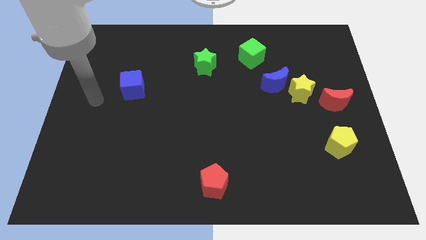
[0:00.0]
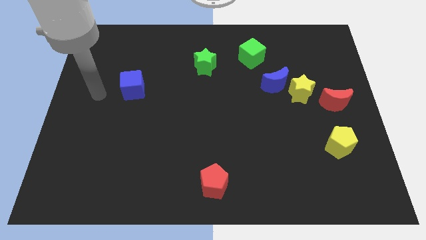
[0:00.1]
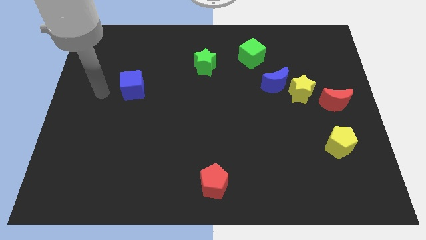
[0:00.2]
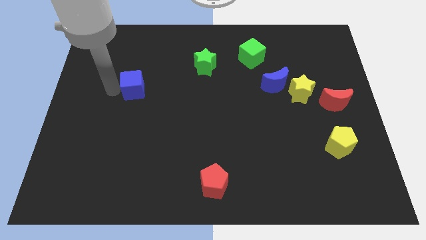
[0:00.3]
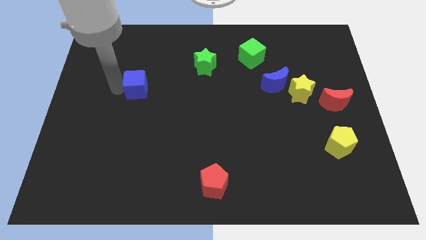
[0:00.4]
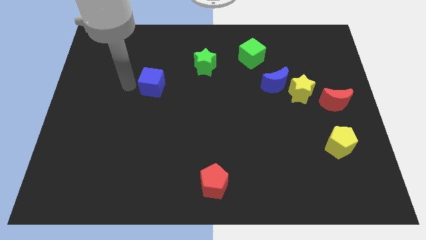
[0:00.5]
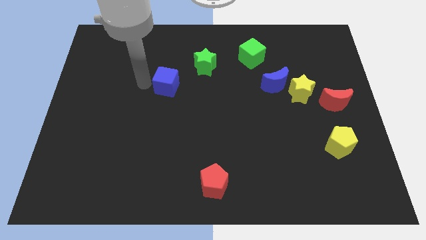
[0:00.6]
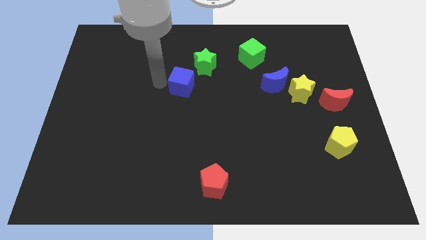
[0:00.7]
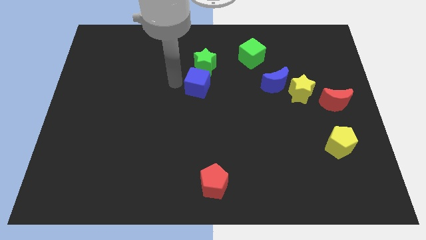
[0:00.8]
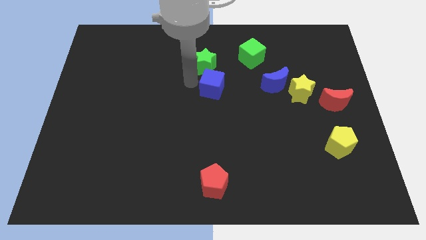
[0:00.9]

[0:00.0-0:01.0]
move the blue cube towards the center

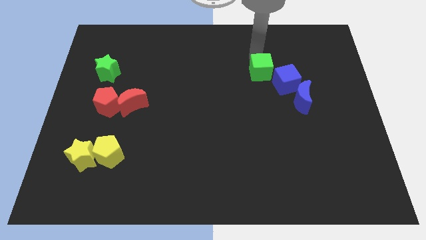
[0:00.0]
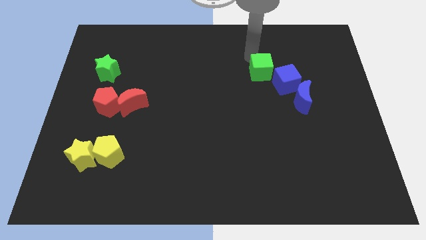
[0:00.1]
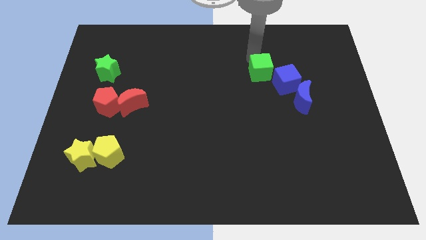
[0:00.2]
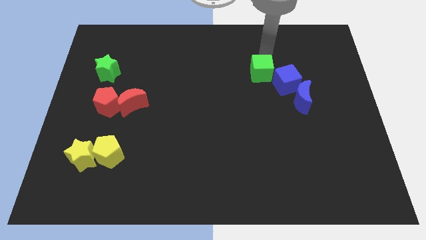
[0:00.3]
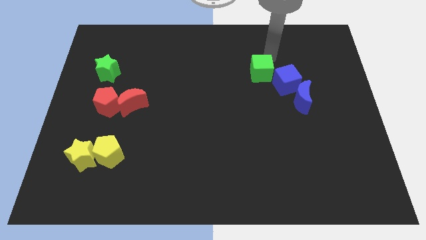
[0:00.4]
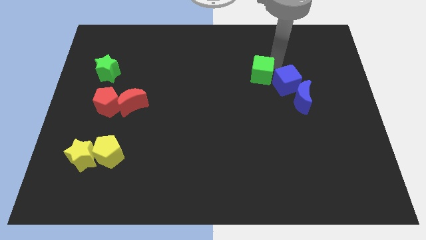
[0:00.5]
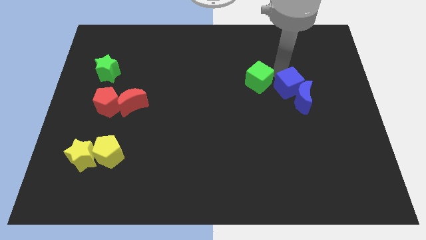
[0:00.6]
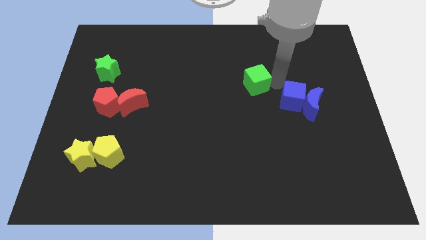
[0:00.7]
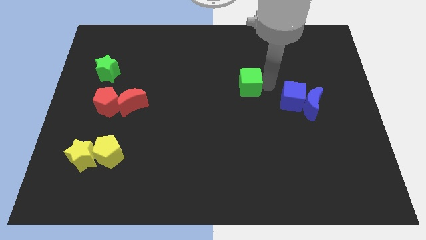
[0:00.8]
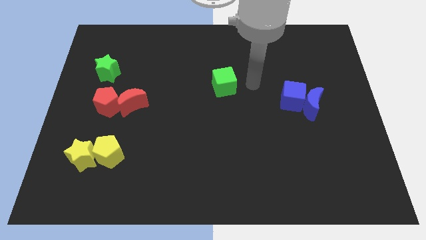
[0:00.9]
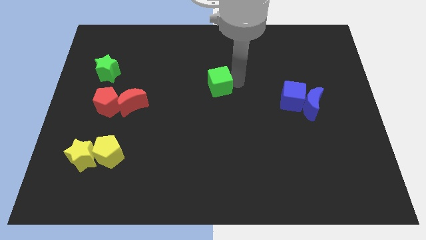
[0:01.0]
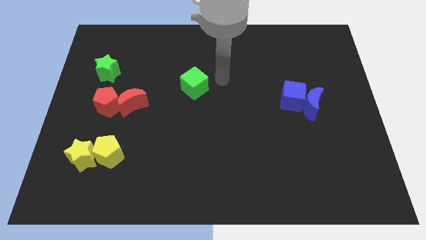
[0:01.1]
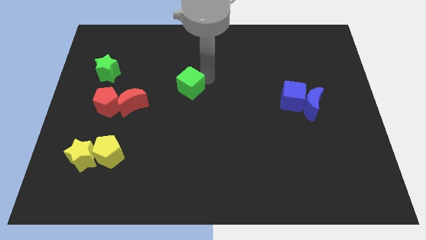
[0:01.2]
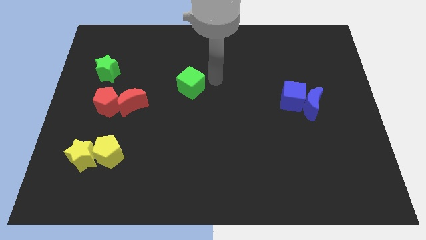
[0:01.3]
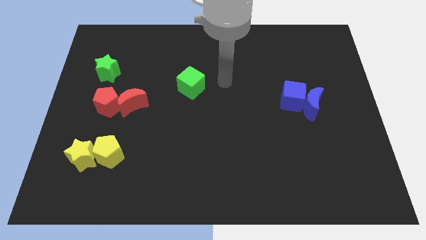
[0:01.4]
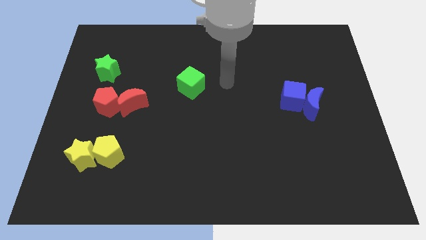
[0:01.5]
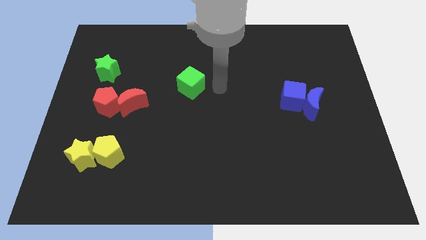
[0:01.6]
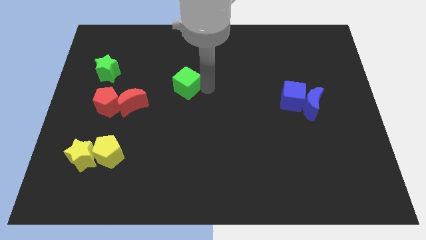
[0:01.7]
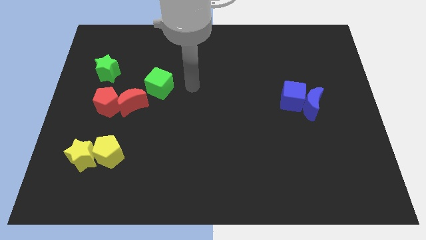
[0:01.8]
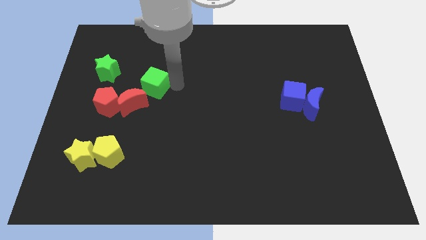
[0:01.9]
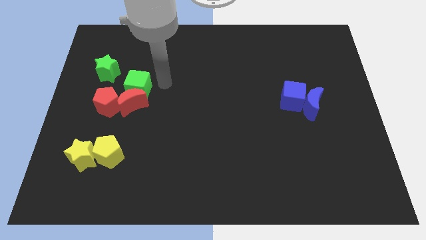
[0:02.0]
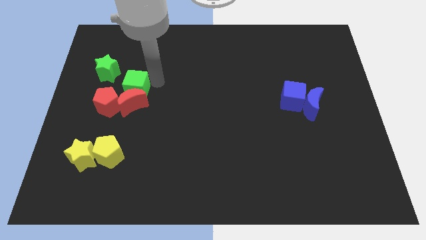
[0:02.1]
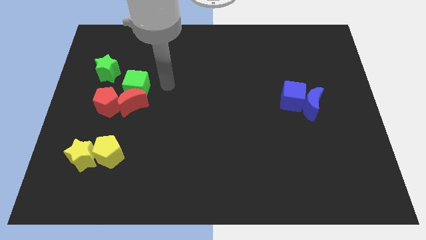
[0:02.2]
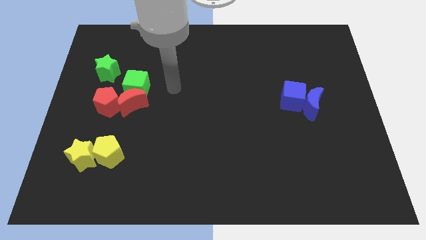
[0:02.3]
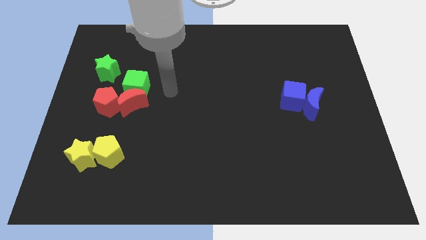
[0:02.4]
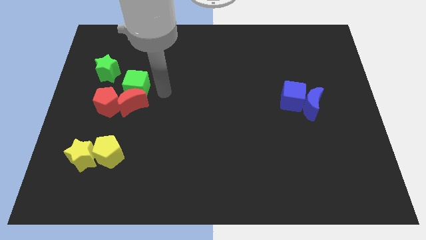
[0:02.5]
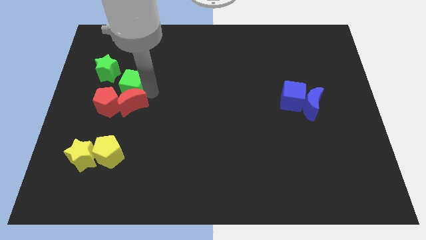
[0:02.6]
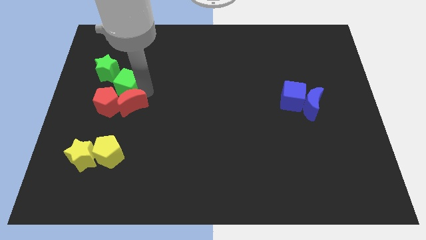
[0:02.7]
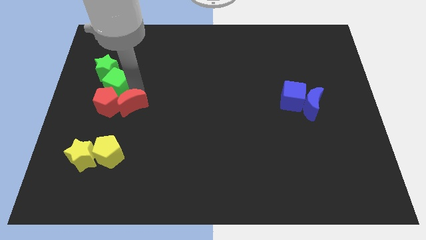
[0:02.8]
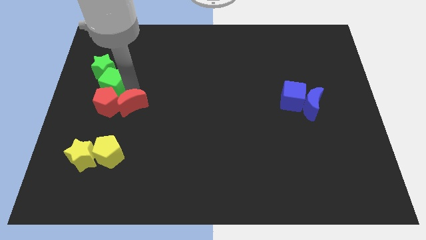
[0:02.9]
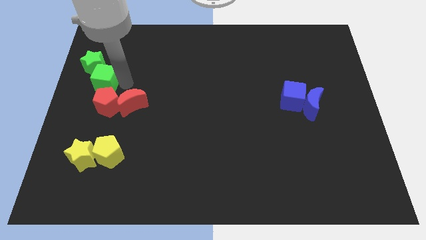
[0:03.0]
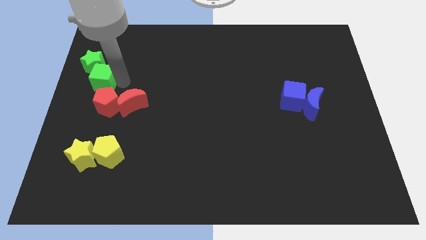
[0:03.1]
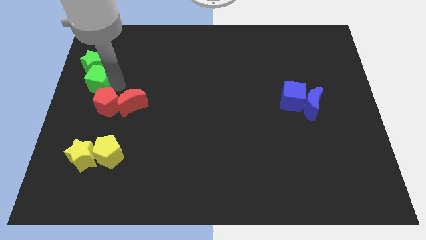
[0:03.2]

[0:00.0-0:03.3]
place the green cube between the green star and red pentagon

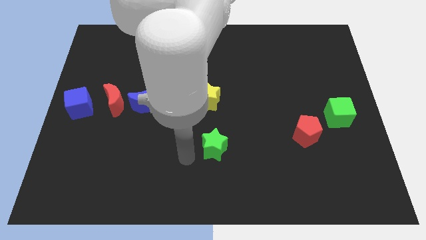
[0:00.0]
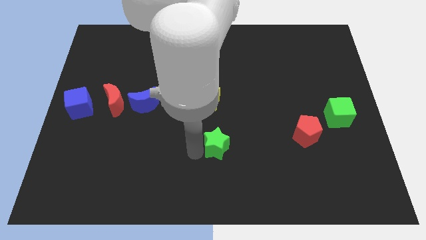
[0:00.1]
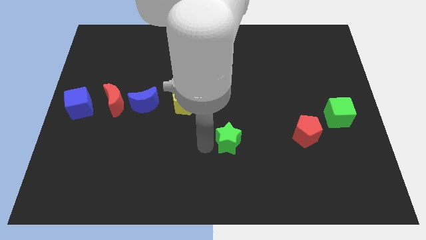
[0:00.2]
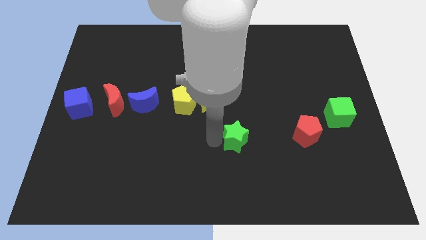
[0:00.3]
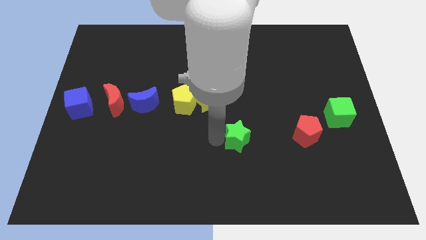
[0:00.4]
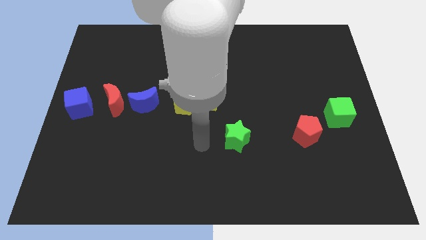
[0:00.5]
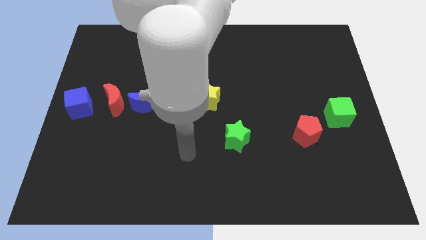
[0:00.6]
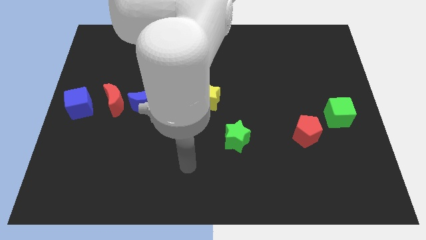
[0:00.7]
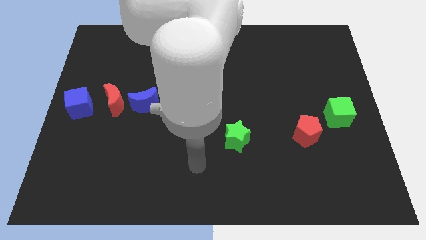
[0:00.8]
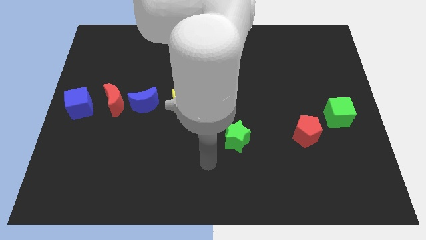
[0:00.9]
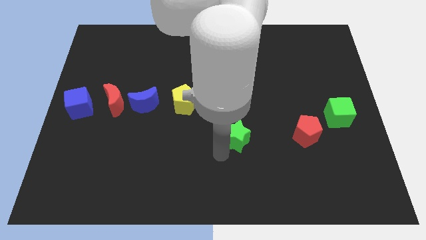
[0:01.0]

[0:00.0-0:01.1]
move the green star parallel to the red pentagon

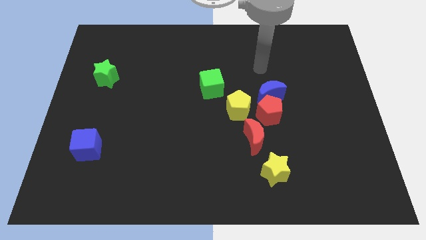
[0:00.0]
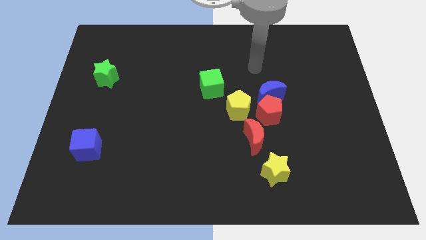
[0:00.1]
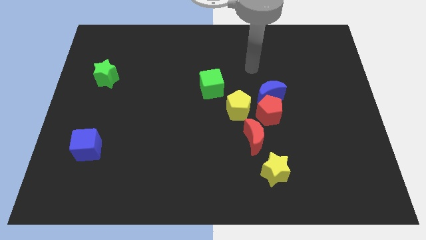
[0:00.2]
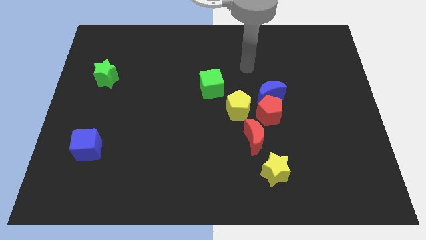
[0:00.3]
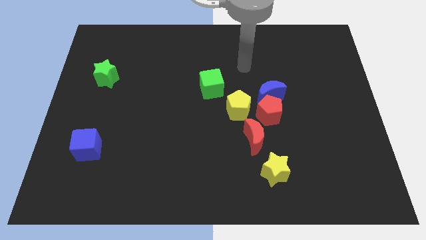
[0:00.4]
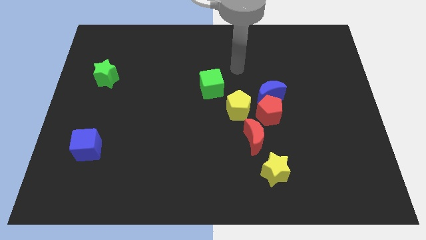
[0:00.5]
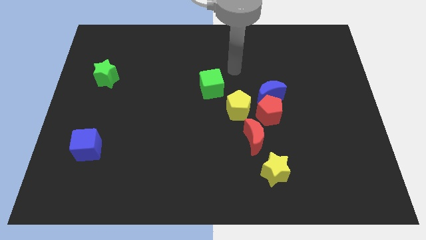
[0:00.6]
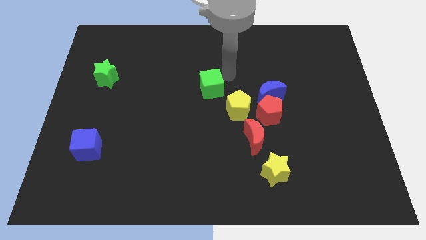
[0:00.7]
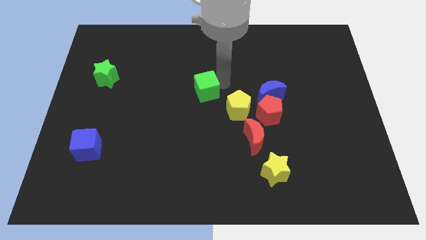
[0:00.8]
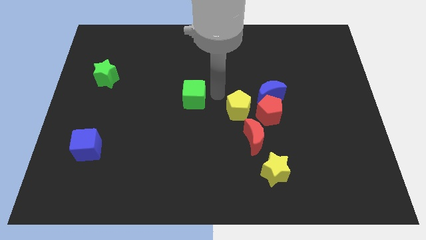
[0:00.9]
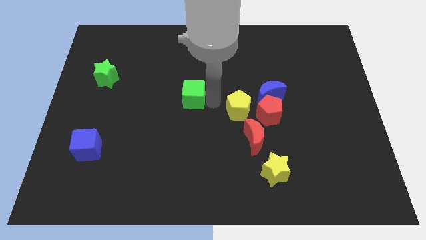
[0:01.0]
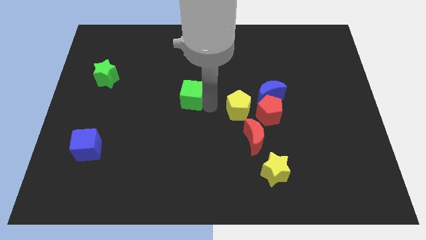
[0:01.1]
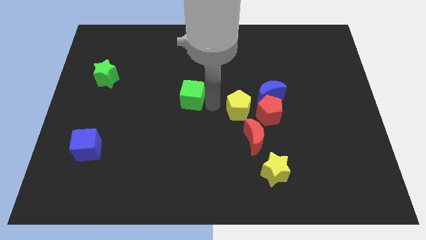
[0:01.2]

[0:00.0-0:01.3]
move the green cube slightly to the left side of the board

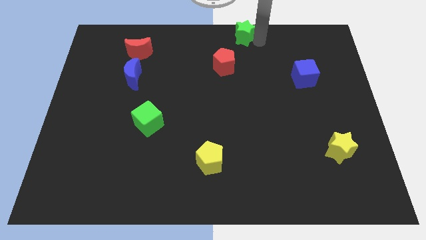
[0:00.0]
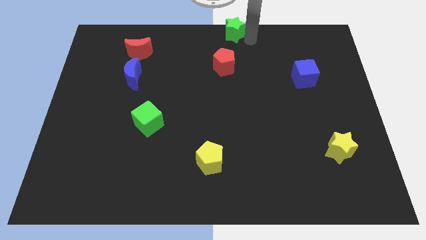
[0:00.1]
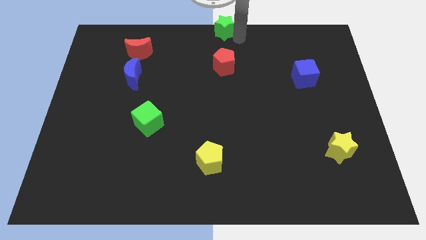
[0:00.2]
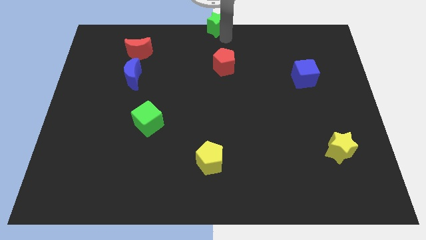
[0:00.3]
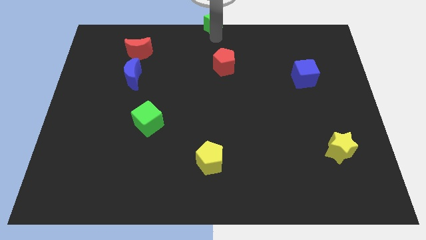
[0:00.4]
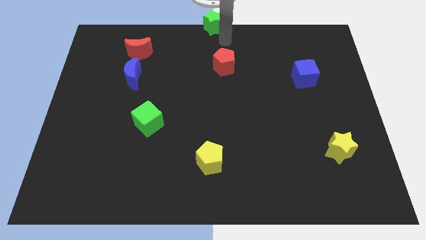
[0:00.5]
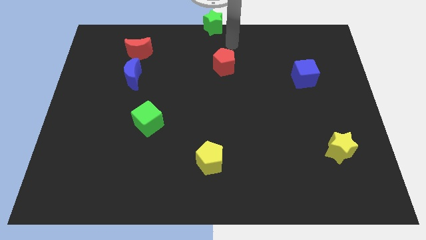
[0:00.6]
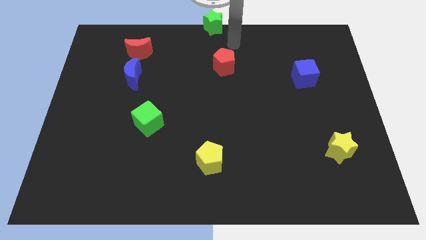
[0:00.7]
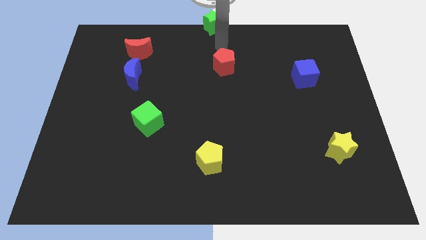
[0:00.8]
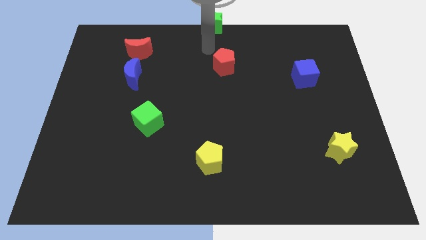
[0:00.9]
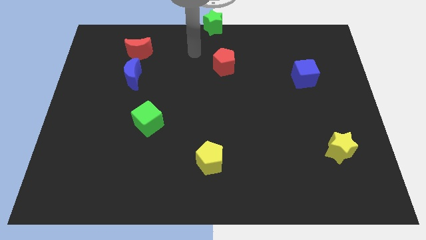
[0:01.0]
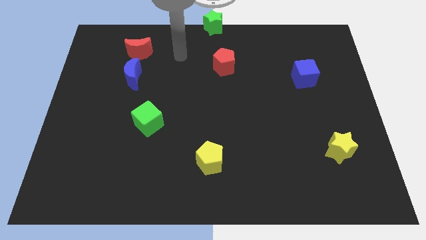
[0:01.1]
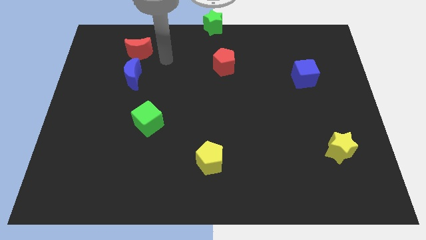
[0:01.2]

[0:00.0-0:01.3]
move the green star at the top center

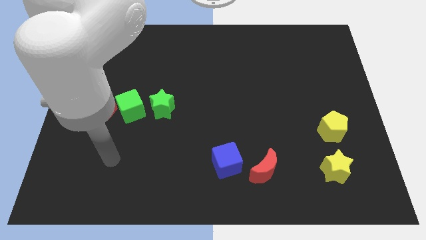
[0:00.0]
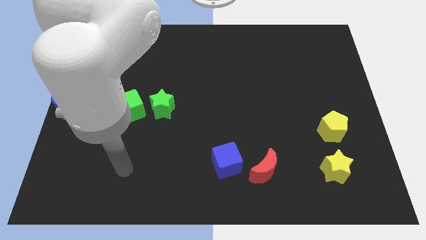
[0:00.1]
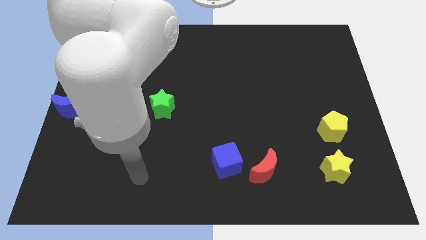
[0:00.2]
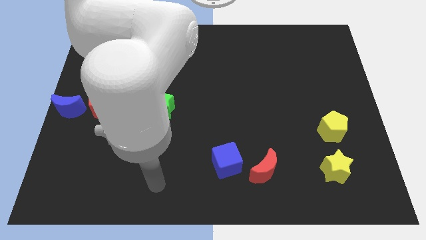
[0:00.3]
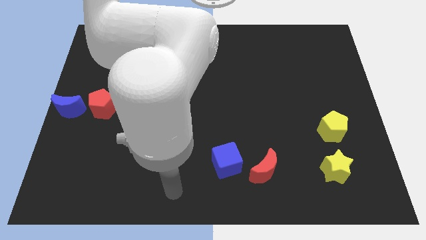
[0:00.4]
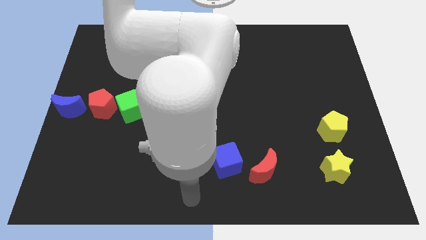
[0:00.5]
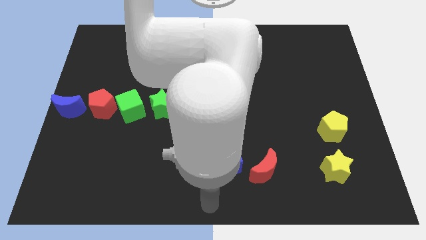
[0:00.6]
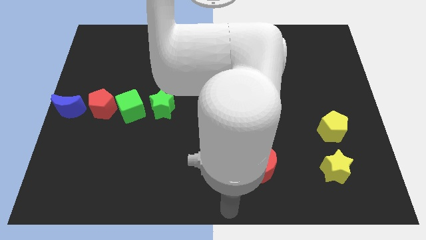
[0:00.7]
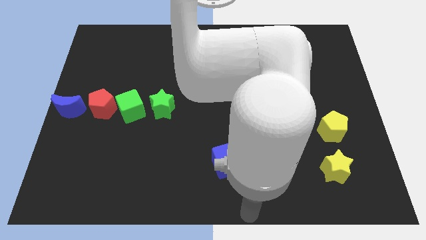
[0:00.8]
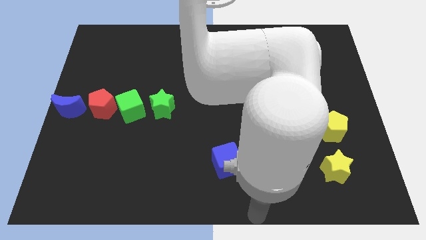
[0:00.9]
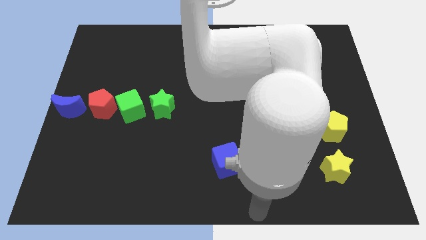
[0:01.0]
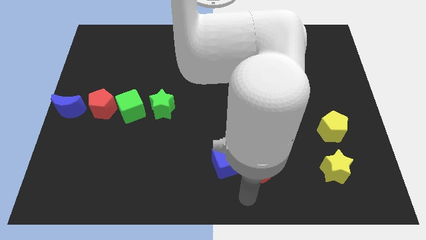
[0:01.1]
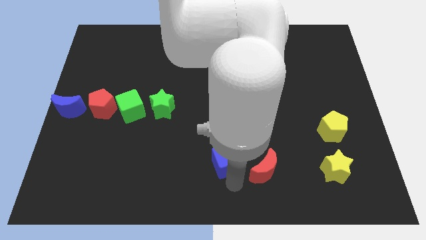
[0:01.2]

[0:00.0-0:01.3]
move your arm around on the board
